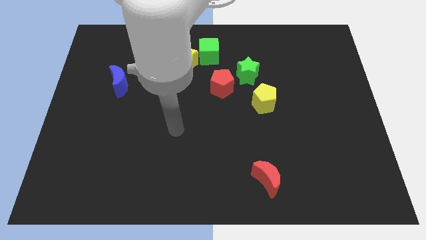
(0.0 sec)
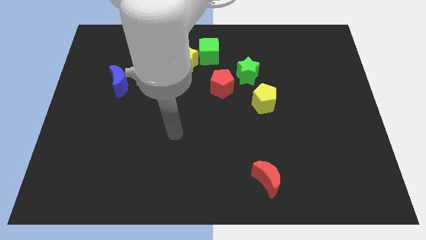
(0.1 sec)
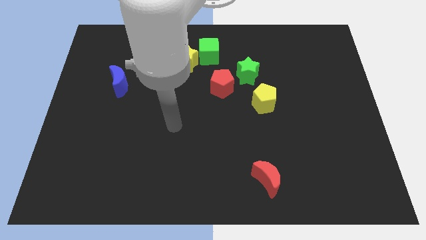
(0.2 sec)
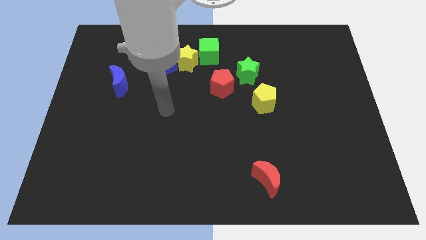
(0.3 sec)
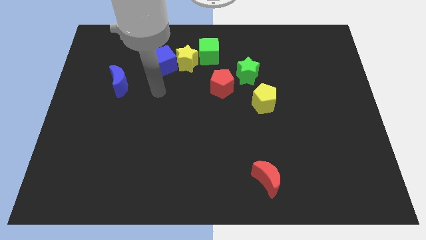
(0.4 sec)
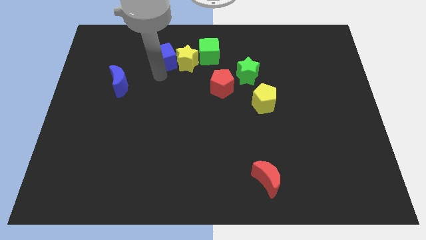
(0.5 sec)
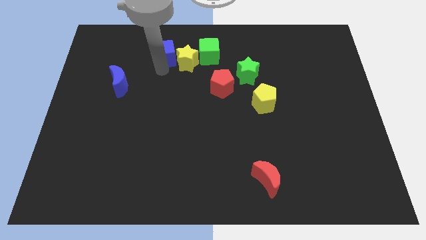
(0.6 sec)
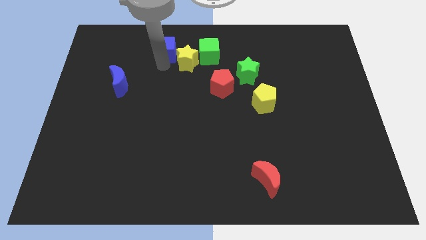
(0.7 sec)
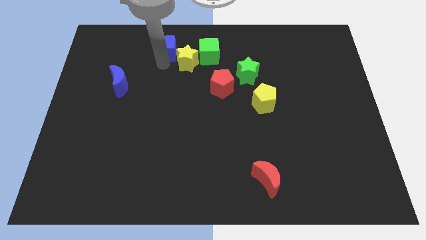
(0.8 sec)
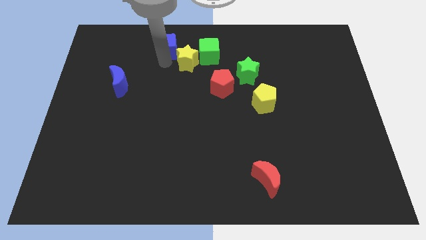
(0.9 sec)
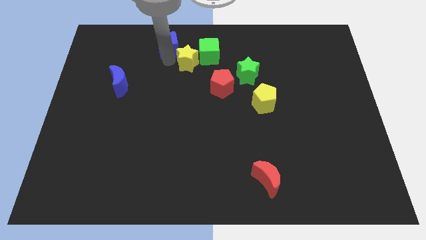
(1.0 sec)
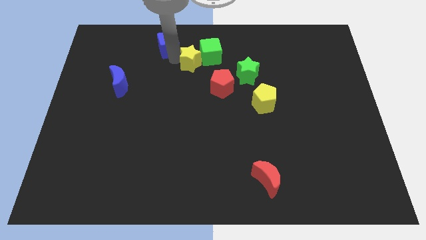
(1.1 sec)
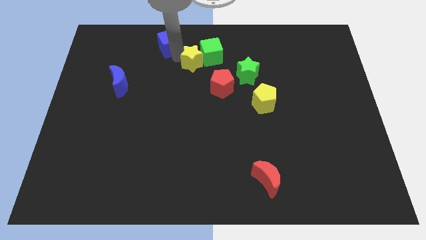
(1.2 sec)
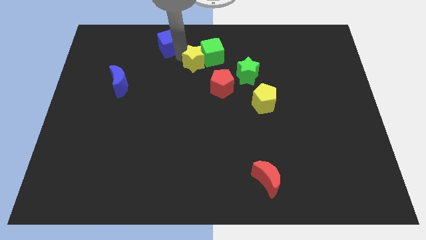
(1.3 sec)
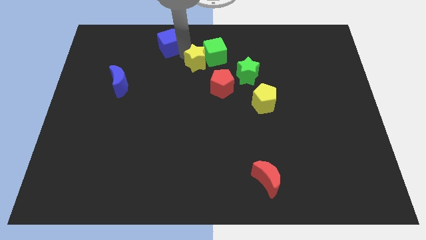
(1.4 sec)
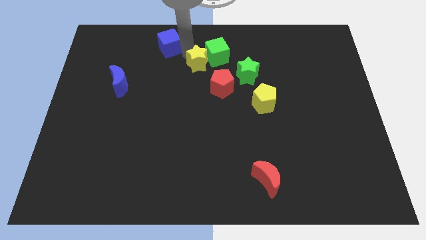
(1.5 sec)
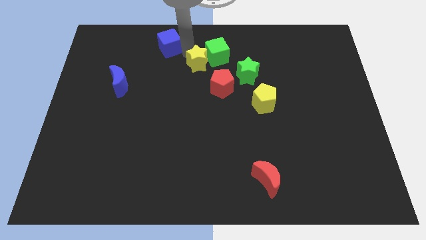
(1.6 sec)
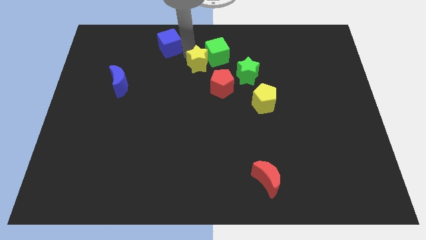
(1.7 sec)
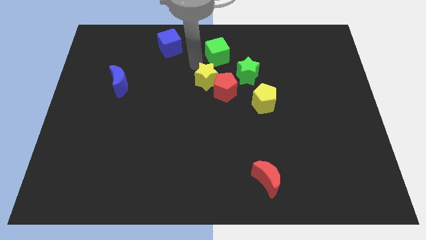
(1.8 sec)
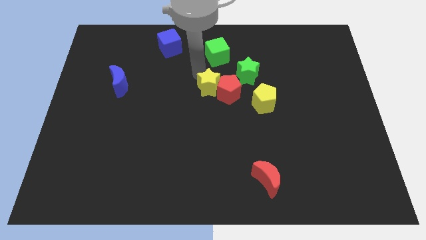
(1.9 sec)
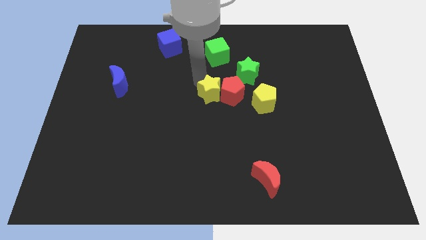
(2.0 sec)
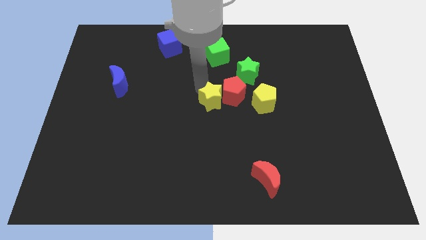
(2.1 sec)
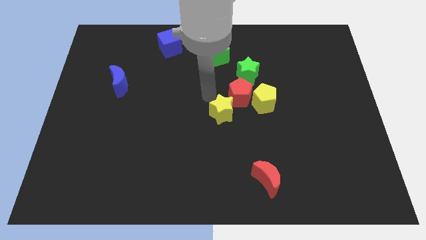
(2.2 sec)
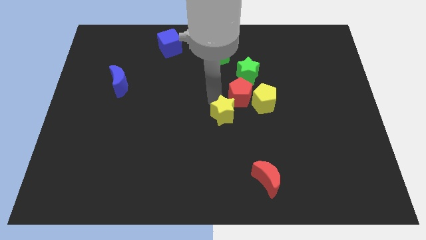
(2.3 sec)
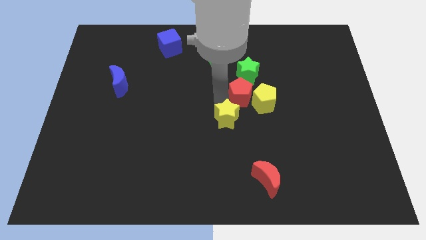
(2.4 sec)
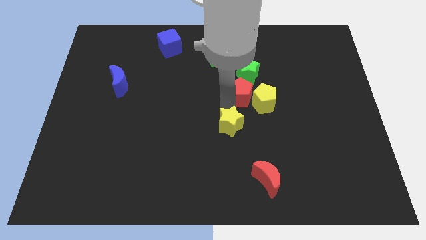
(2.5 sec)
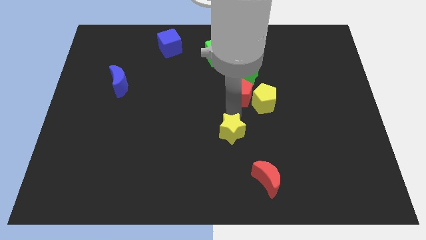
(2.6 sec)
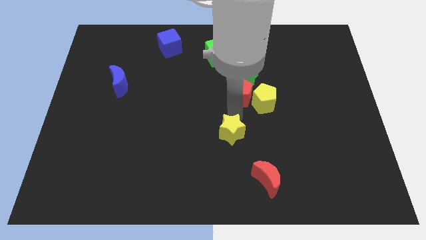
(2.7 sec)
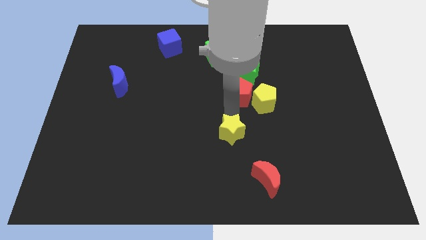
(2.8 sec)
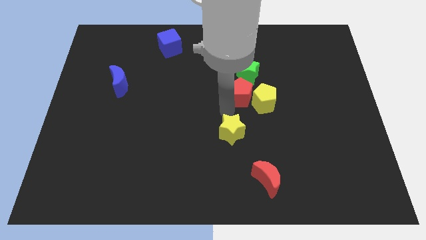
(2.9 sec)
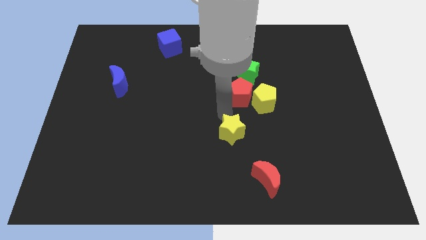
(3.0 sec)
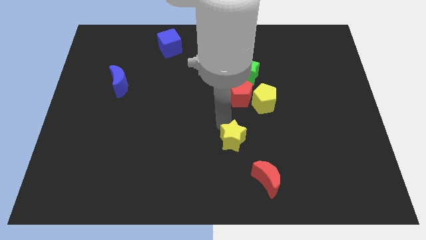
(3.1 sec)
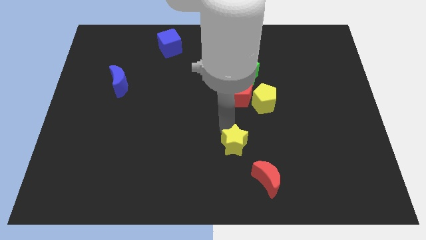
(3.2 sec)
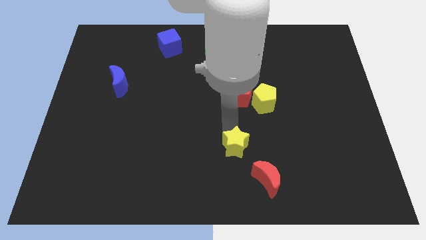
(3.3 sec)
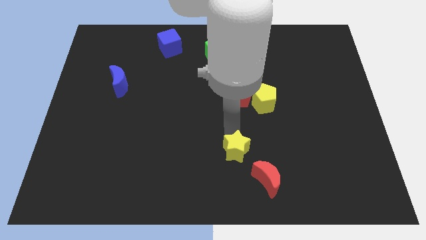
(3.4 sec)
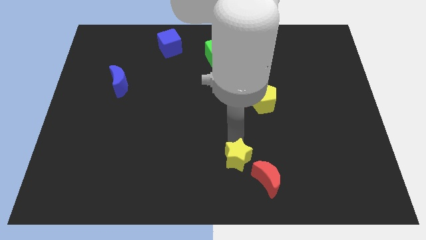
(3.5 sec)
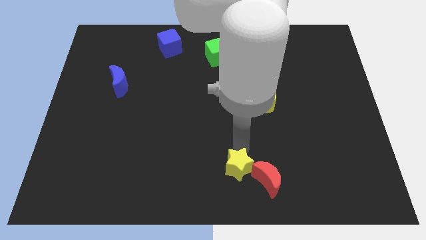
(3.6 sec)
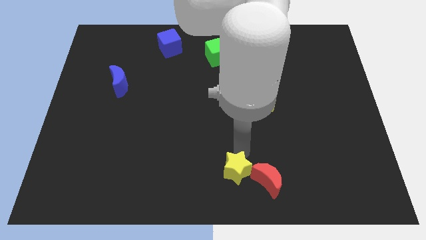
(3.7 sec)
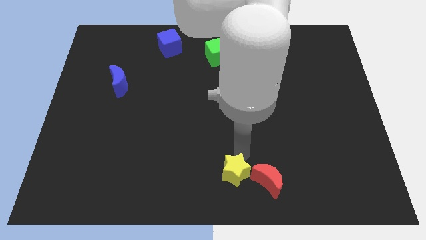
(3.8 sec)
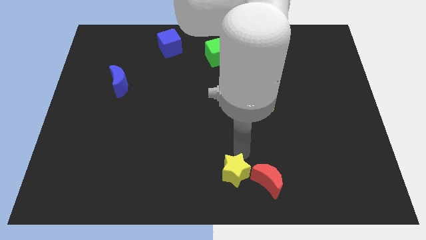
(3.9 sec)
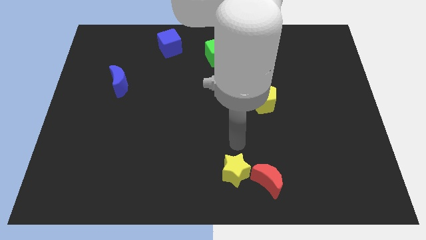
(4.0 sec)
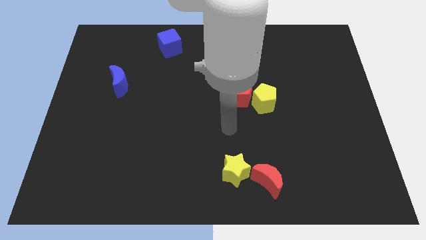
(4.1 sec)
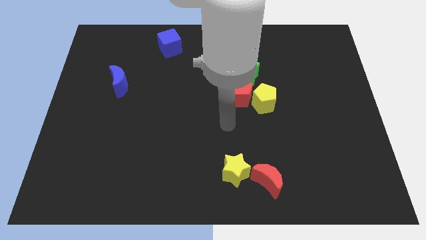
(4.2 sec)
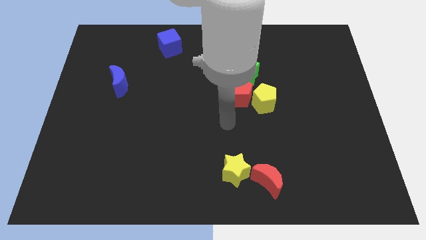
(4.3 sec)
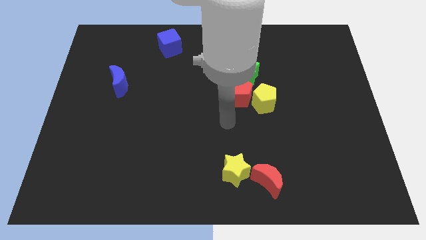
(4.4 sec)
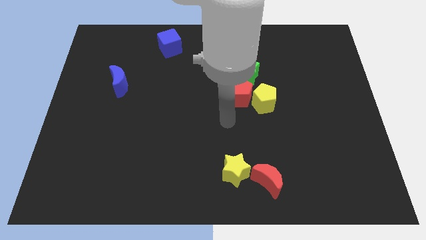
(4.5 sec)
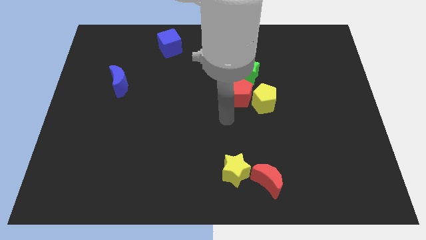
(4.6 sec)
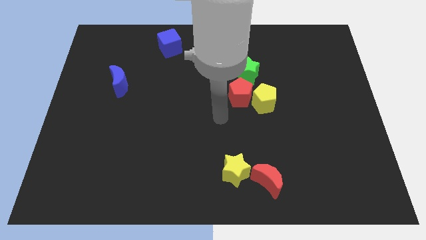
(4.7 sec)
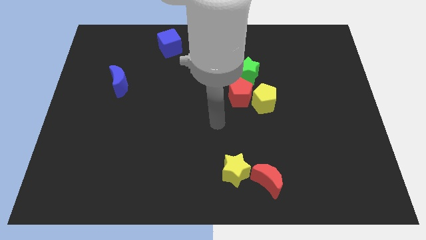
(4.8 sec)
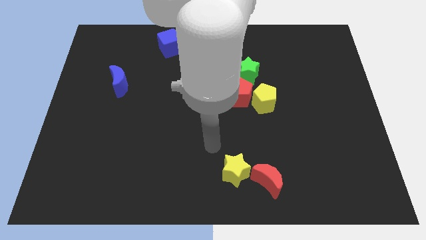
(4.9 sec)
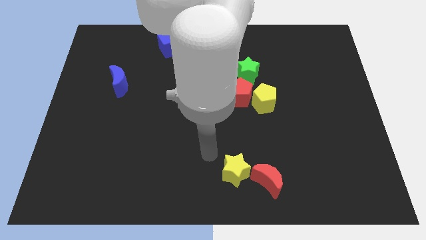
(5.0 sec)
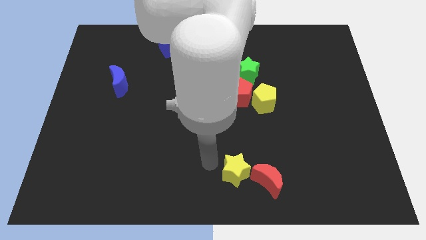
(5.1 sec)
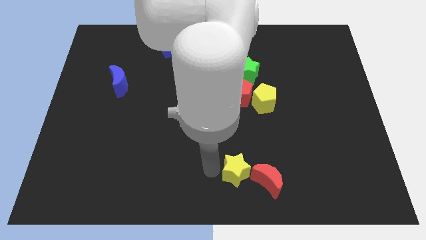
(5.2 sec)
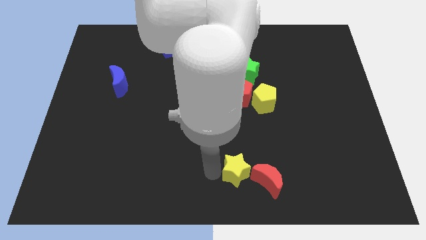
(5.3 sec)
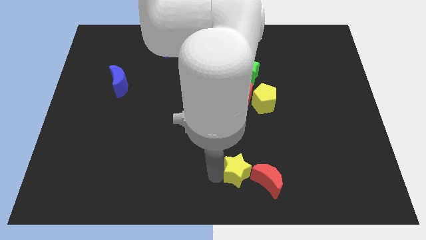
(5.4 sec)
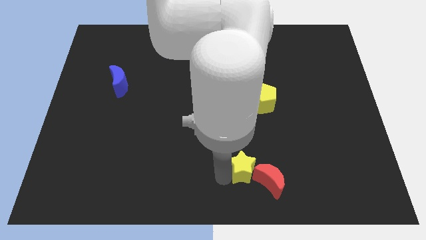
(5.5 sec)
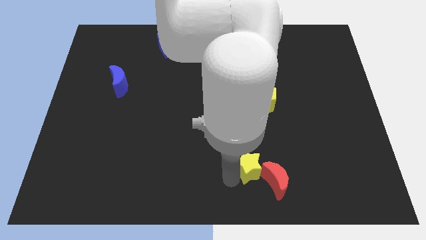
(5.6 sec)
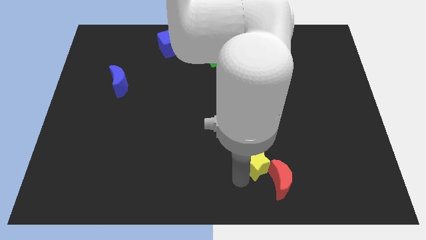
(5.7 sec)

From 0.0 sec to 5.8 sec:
slide the yellow star towards the red moon

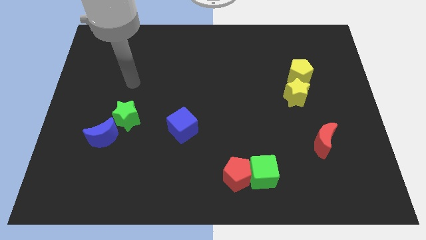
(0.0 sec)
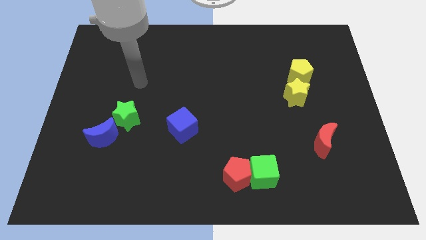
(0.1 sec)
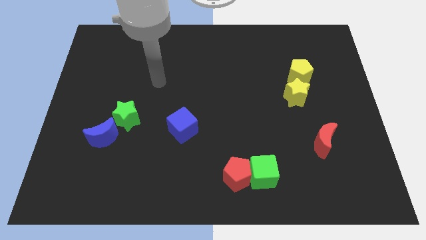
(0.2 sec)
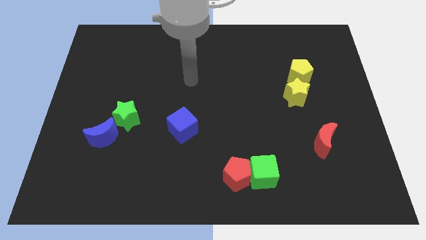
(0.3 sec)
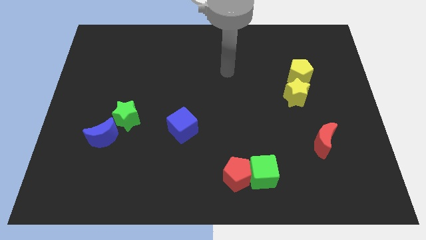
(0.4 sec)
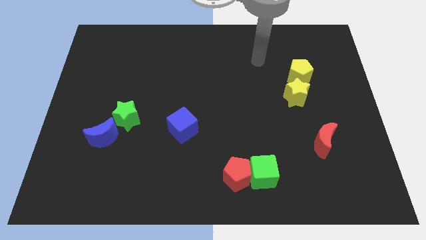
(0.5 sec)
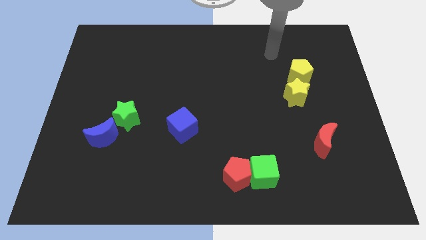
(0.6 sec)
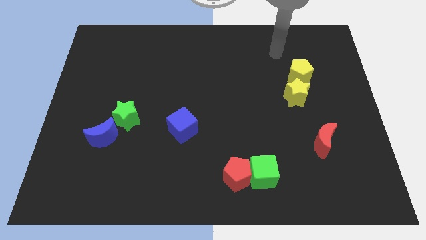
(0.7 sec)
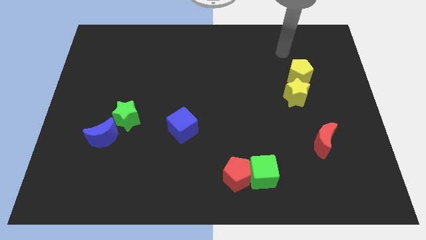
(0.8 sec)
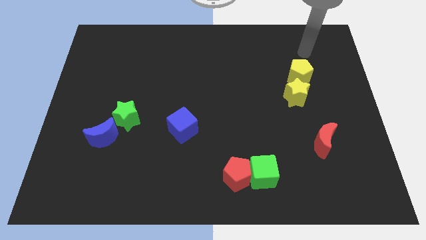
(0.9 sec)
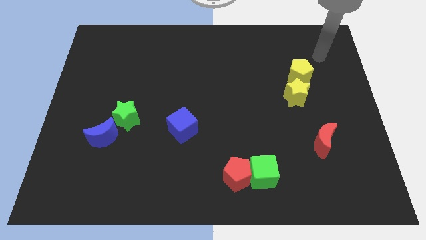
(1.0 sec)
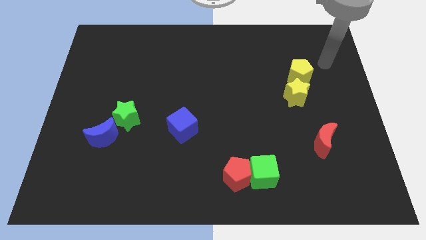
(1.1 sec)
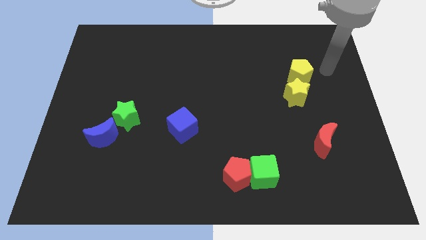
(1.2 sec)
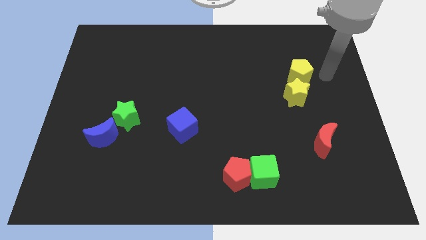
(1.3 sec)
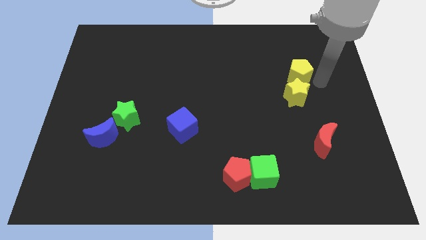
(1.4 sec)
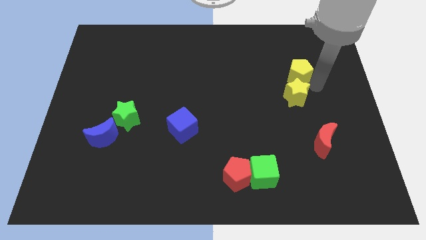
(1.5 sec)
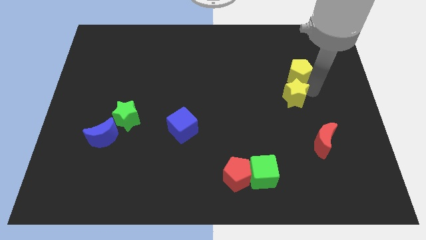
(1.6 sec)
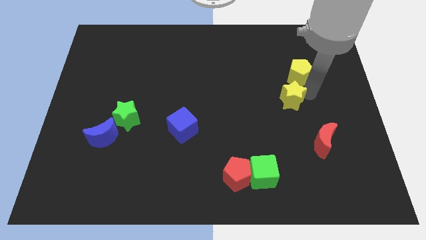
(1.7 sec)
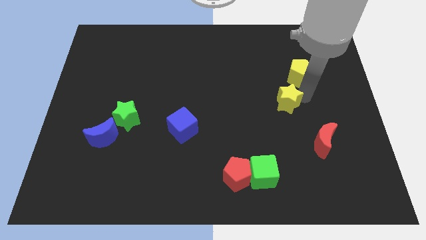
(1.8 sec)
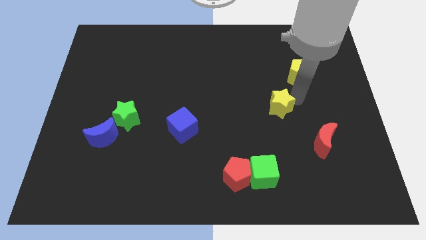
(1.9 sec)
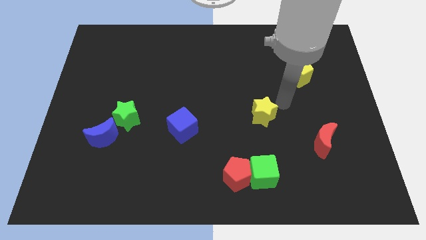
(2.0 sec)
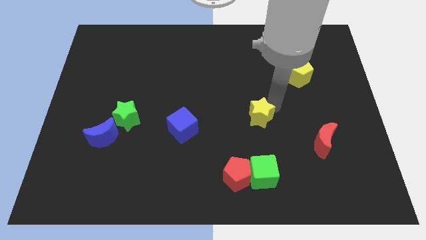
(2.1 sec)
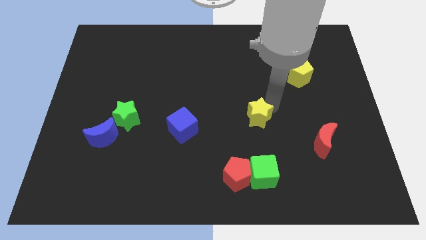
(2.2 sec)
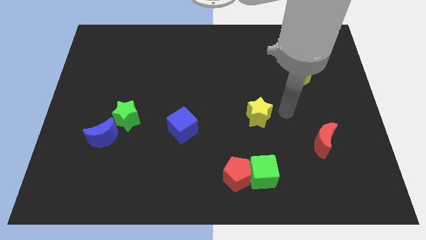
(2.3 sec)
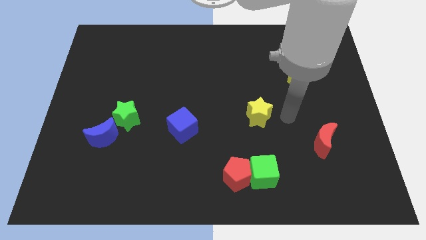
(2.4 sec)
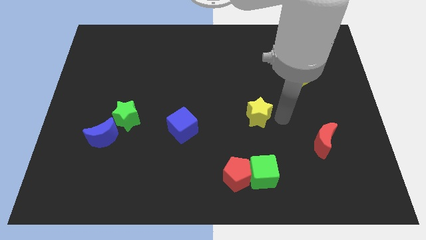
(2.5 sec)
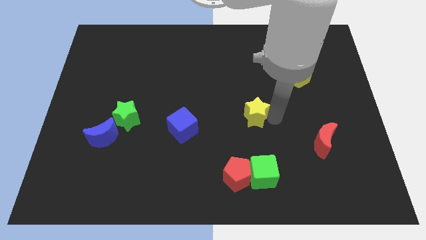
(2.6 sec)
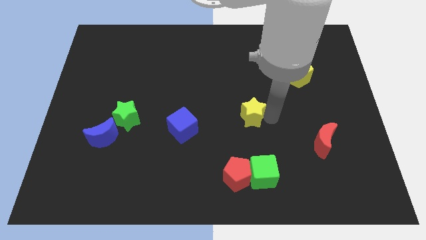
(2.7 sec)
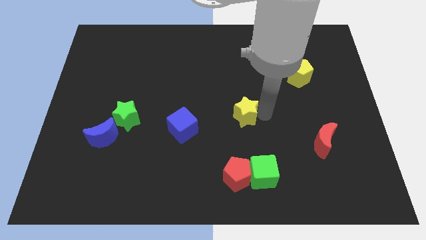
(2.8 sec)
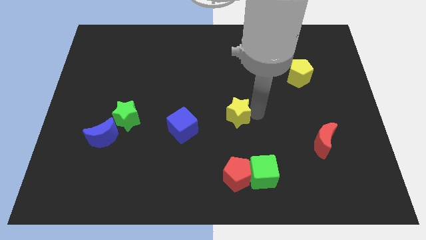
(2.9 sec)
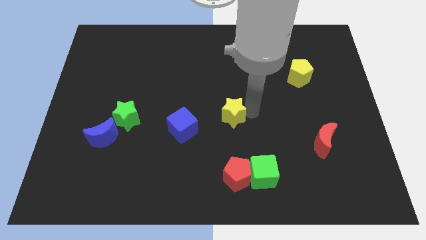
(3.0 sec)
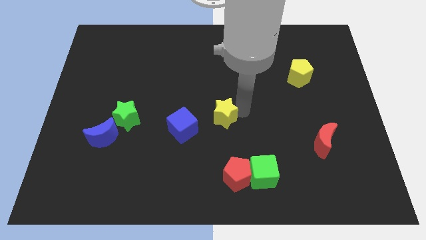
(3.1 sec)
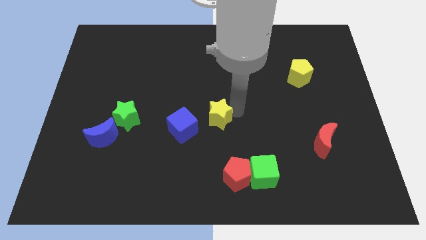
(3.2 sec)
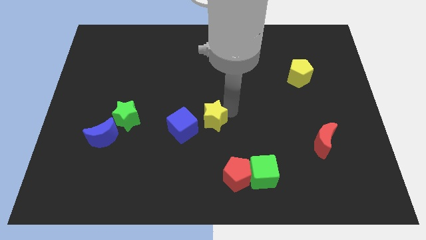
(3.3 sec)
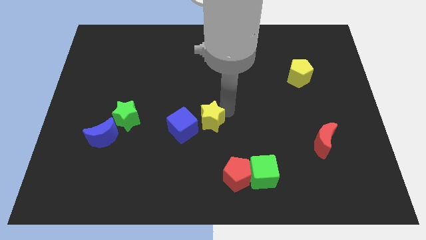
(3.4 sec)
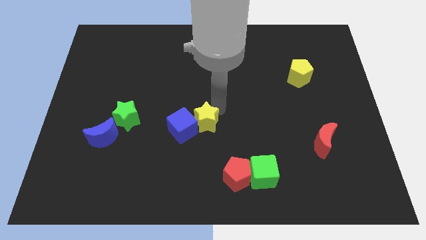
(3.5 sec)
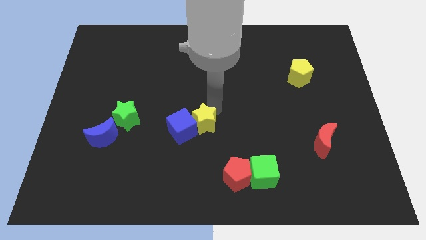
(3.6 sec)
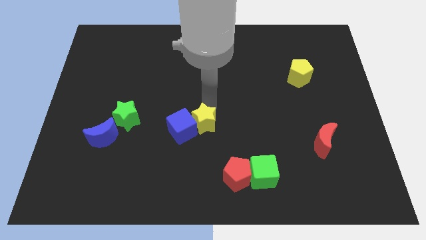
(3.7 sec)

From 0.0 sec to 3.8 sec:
put the yellow star towards the blue cube
